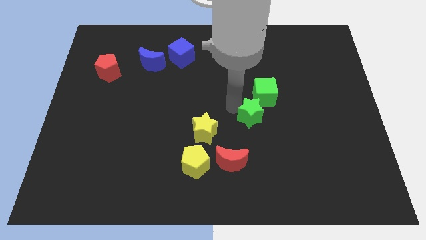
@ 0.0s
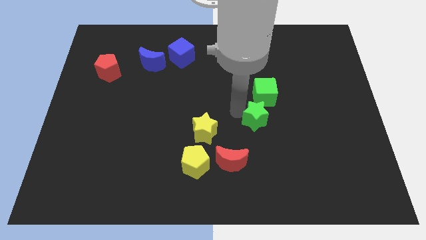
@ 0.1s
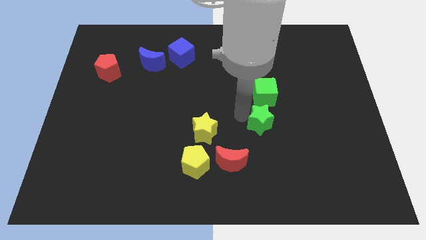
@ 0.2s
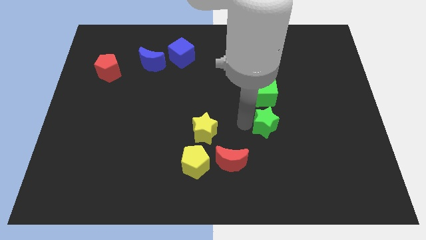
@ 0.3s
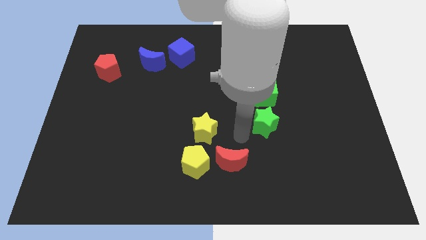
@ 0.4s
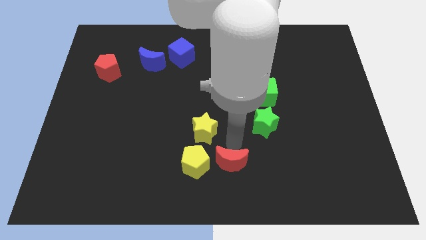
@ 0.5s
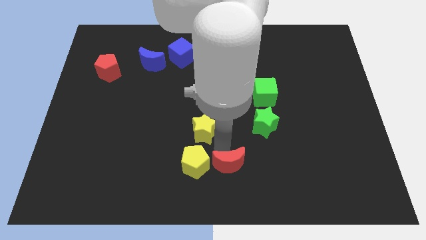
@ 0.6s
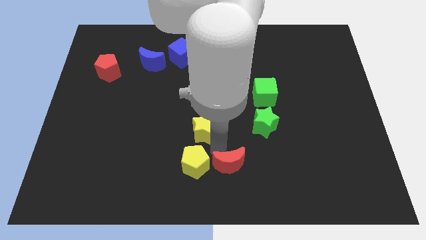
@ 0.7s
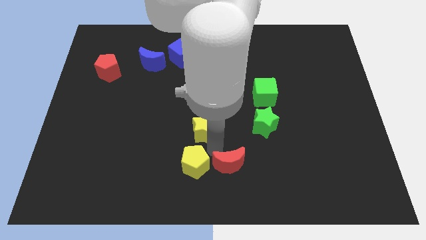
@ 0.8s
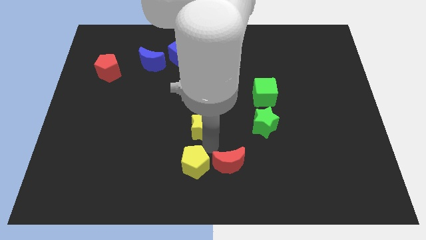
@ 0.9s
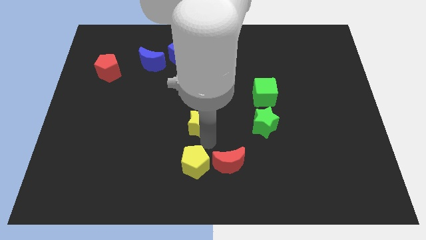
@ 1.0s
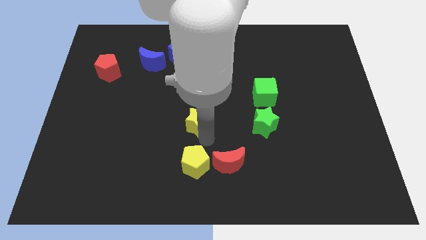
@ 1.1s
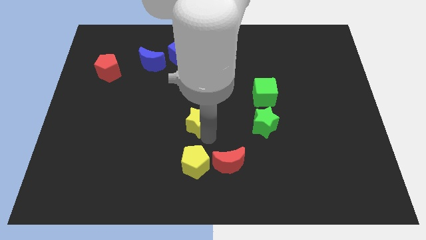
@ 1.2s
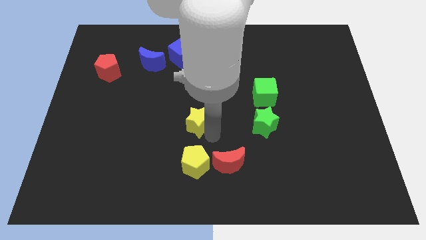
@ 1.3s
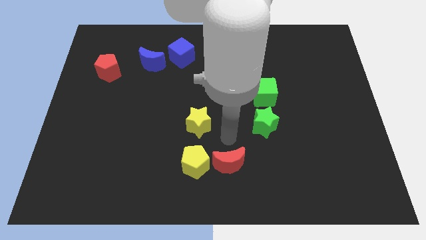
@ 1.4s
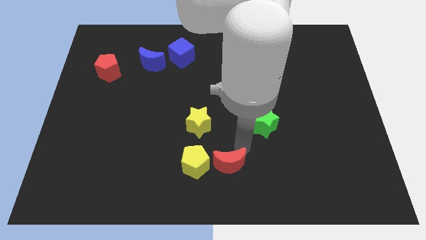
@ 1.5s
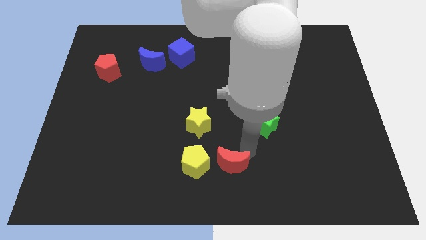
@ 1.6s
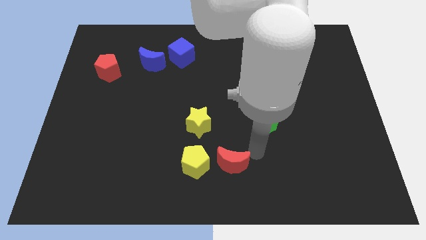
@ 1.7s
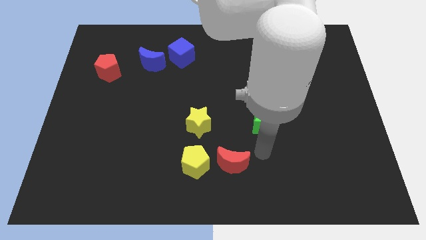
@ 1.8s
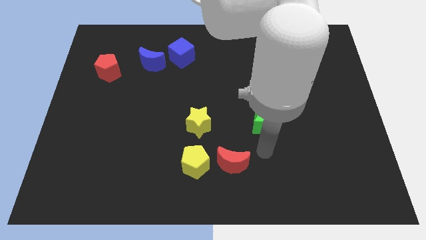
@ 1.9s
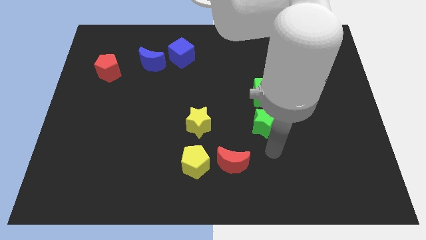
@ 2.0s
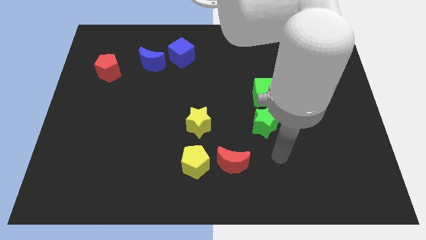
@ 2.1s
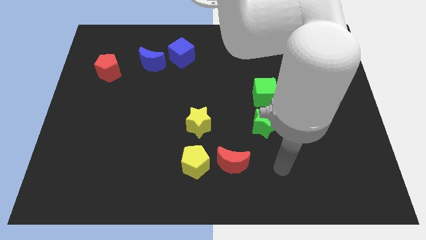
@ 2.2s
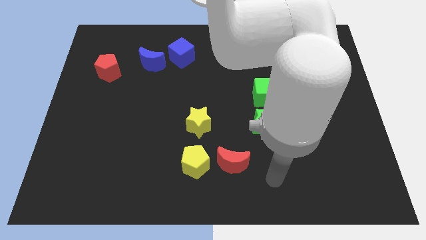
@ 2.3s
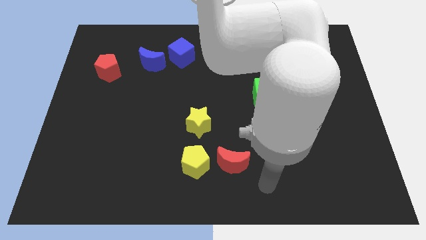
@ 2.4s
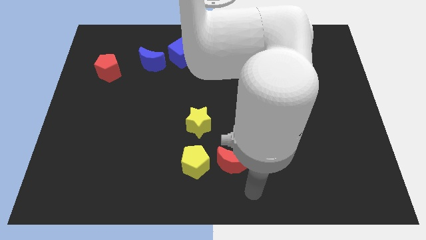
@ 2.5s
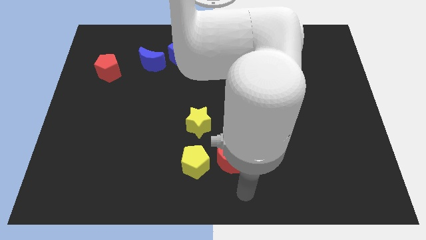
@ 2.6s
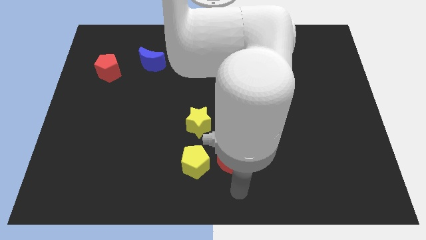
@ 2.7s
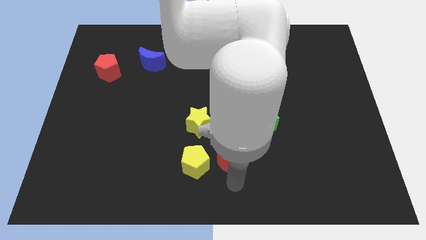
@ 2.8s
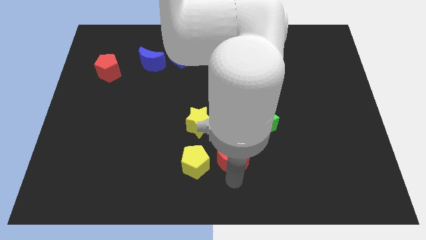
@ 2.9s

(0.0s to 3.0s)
slightly move the yellow star up

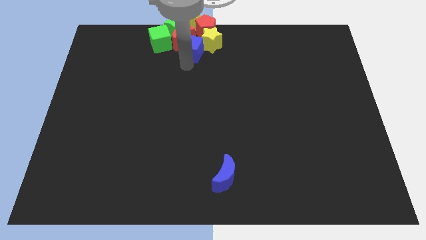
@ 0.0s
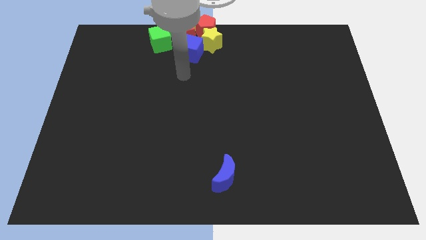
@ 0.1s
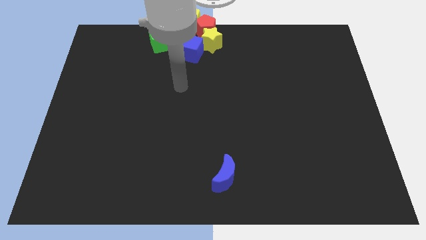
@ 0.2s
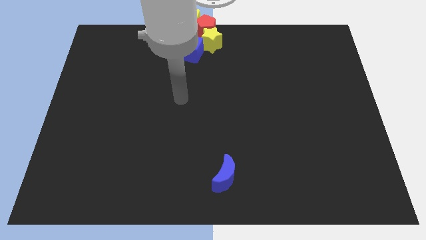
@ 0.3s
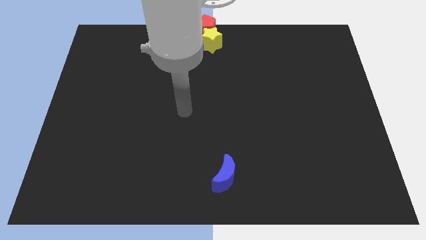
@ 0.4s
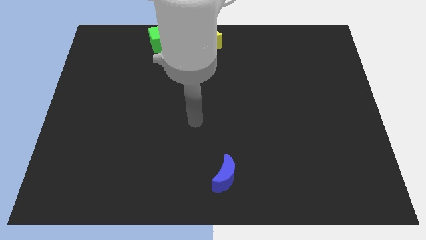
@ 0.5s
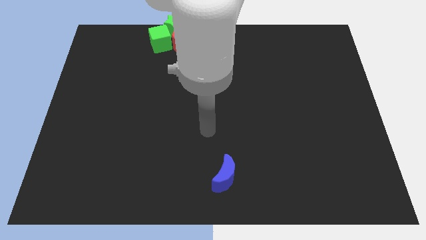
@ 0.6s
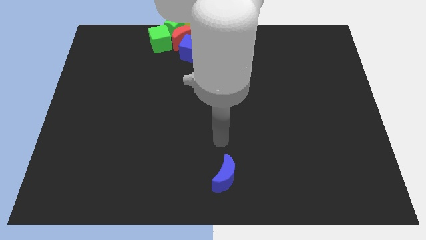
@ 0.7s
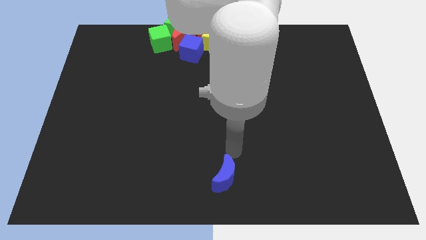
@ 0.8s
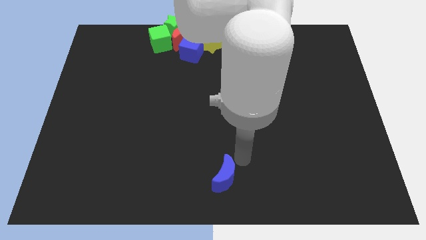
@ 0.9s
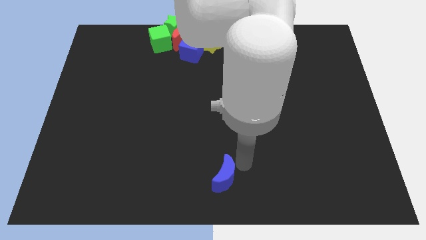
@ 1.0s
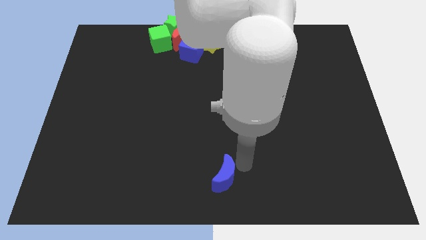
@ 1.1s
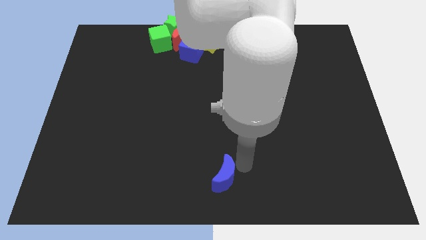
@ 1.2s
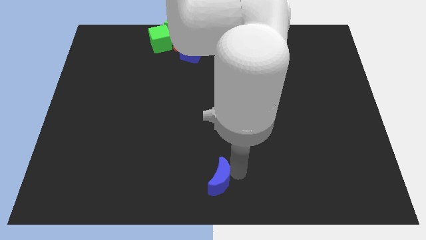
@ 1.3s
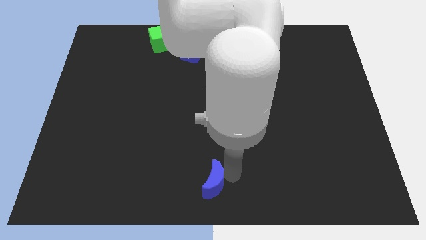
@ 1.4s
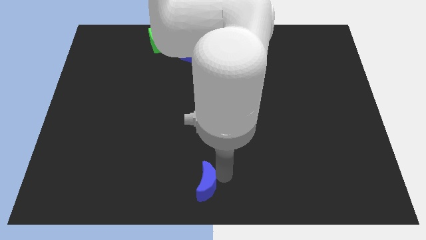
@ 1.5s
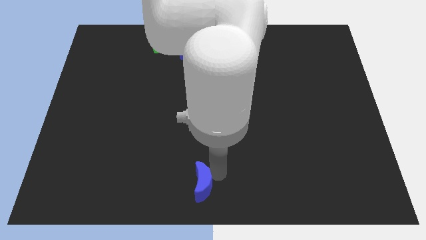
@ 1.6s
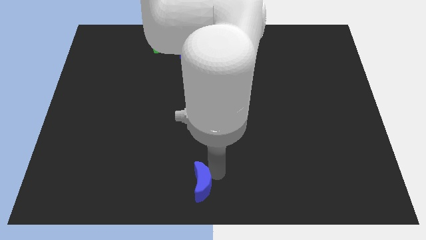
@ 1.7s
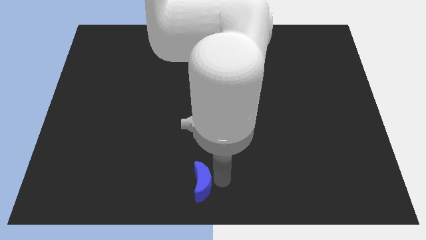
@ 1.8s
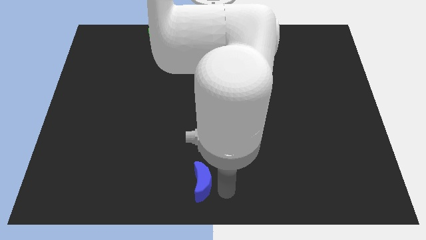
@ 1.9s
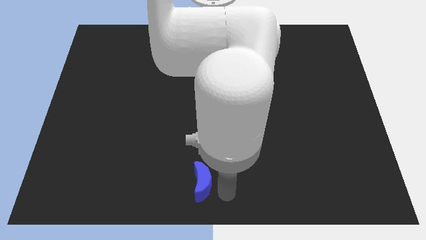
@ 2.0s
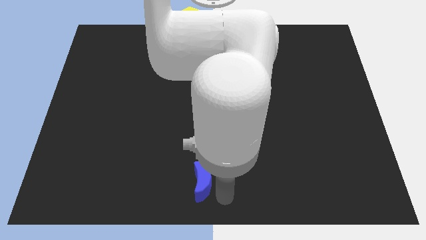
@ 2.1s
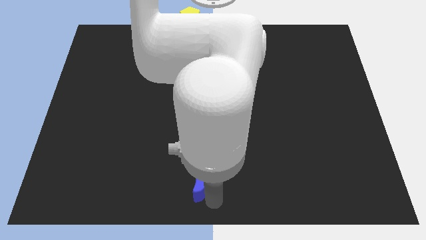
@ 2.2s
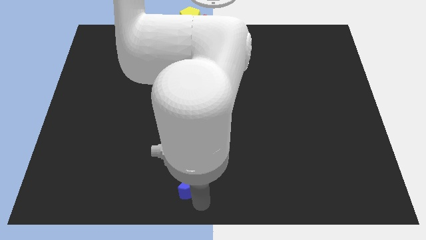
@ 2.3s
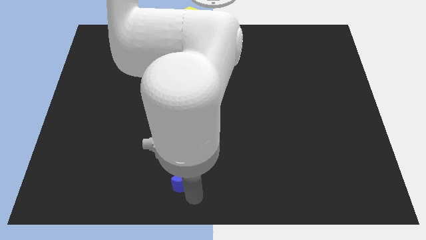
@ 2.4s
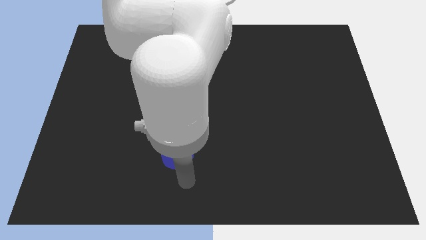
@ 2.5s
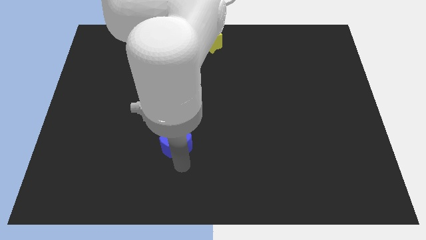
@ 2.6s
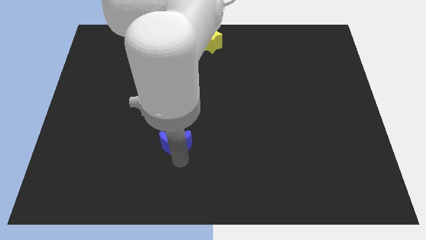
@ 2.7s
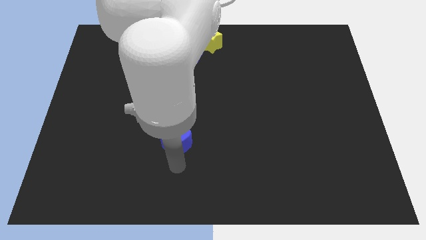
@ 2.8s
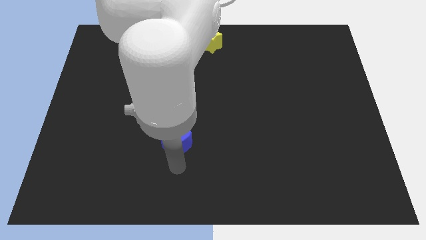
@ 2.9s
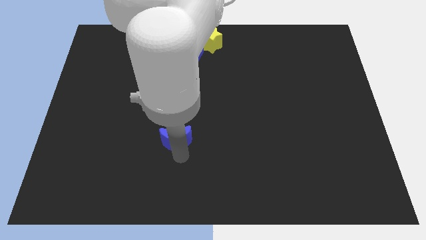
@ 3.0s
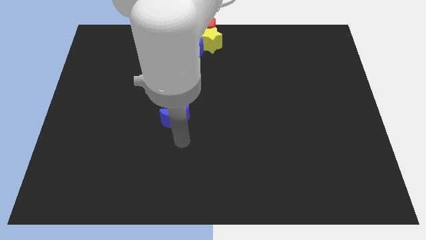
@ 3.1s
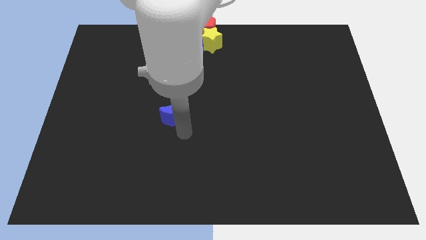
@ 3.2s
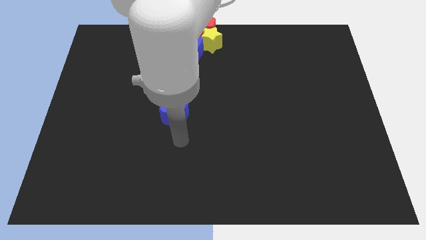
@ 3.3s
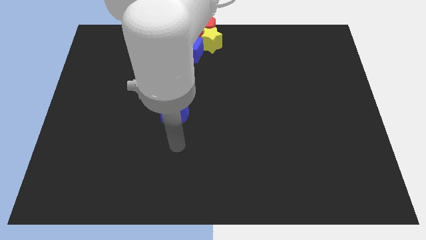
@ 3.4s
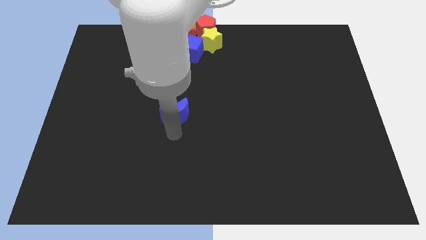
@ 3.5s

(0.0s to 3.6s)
move the arm away from the blue cube

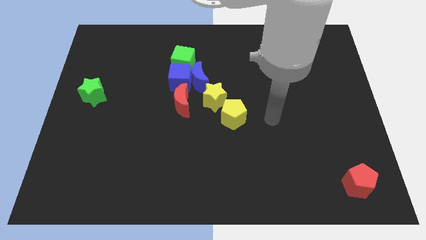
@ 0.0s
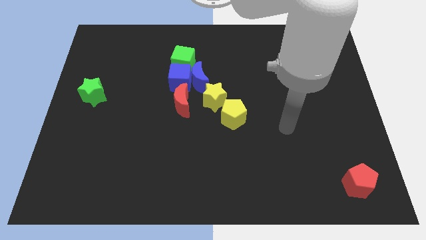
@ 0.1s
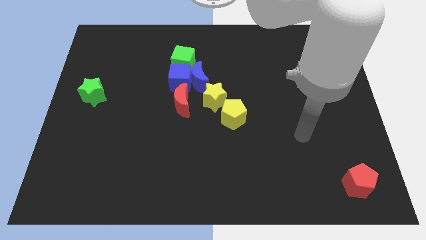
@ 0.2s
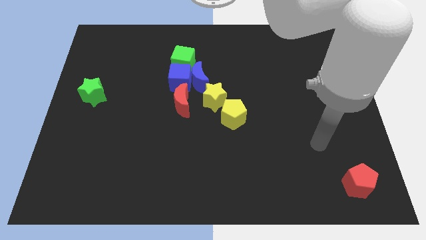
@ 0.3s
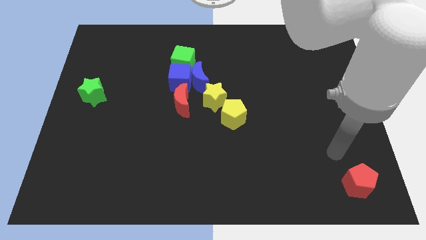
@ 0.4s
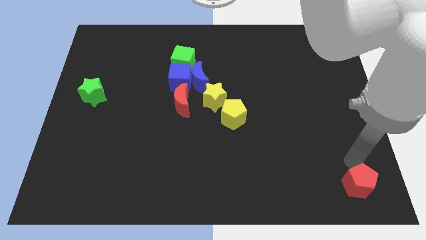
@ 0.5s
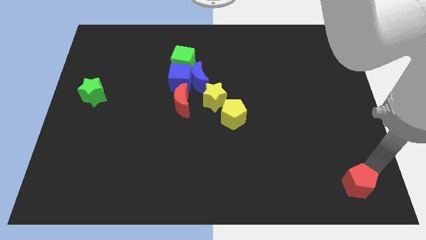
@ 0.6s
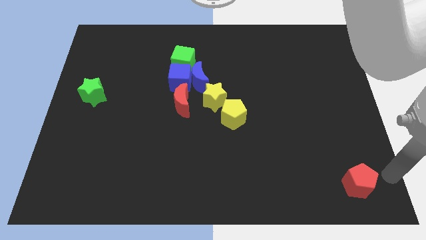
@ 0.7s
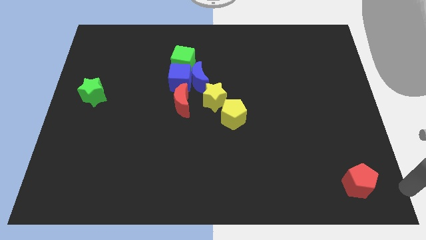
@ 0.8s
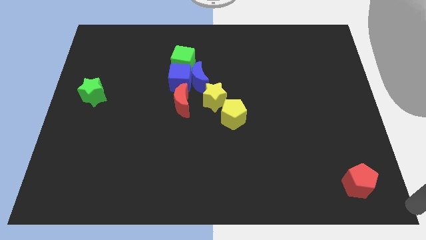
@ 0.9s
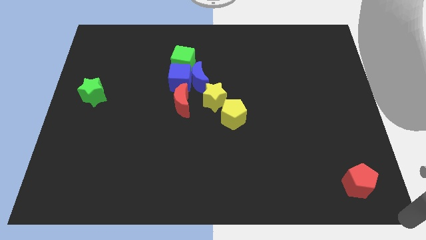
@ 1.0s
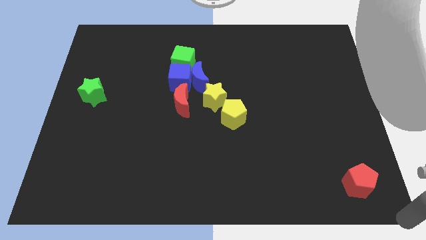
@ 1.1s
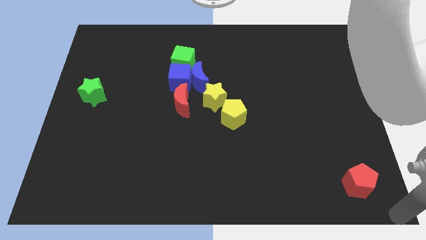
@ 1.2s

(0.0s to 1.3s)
point your arm at the bottom right corner of the board

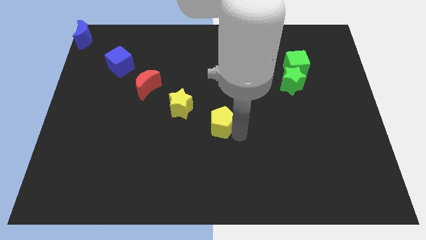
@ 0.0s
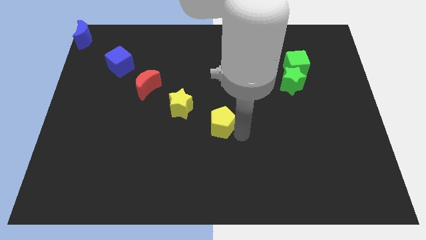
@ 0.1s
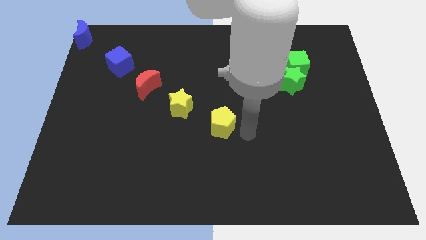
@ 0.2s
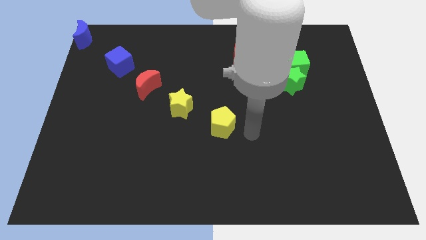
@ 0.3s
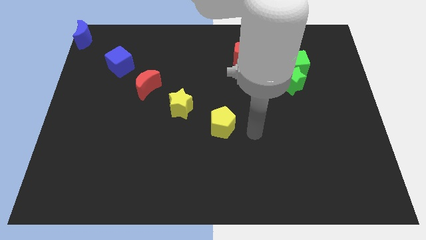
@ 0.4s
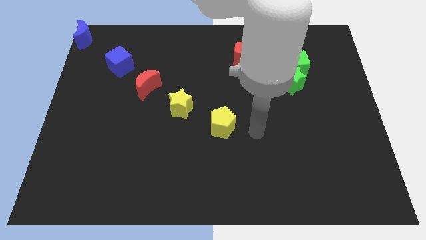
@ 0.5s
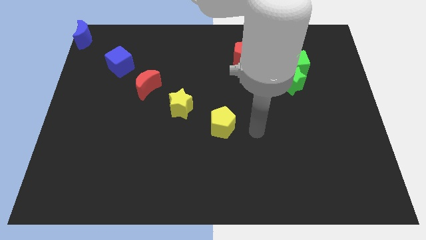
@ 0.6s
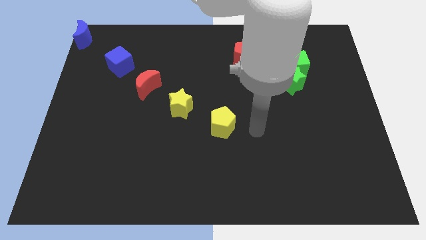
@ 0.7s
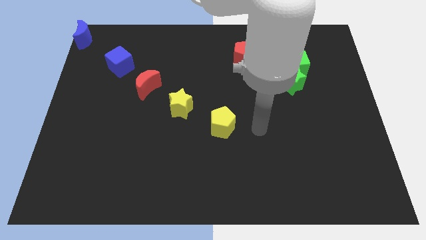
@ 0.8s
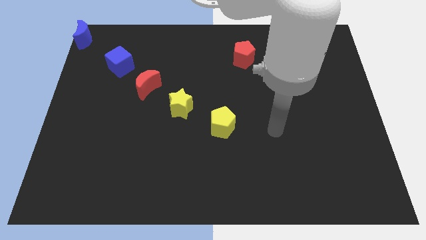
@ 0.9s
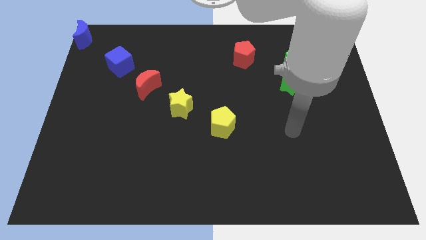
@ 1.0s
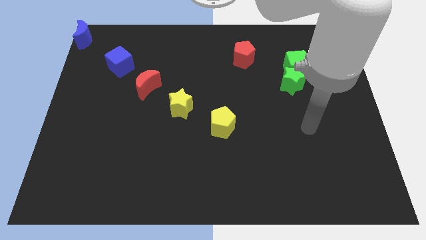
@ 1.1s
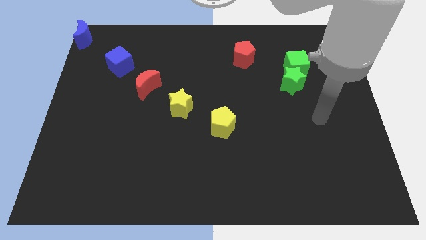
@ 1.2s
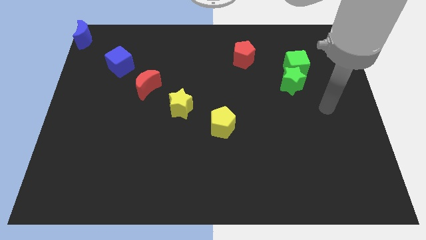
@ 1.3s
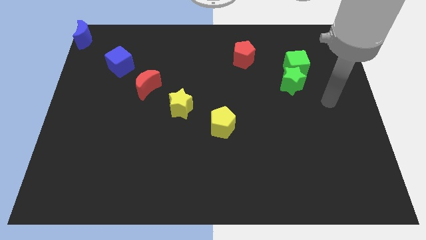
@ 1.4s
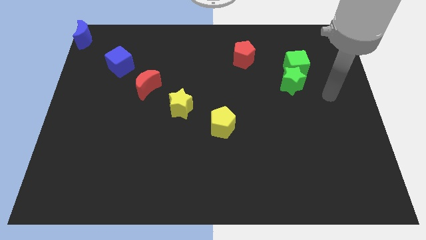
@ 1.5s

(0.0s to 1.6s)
move the arm away from the yellow pentagon
